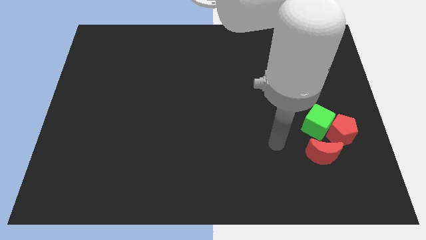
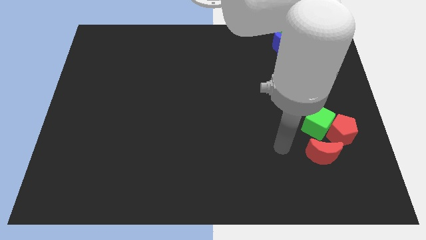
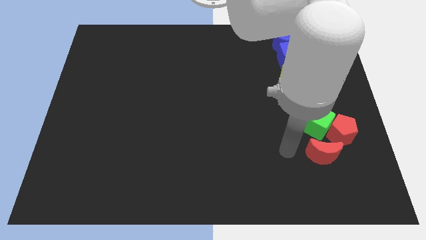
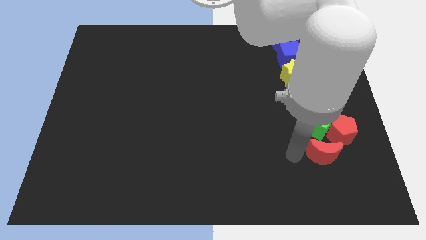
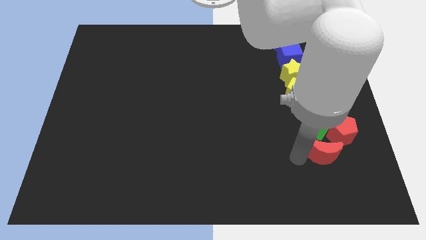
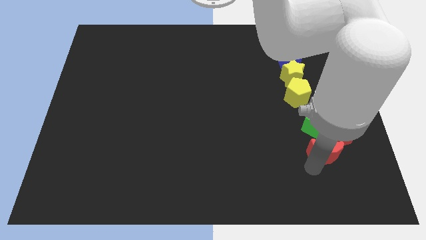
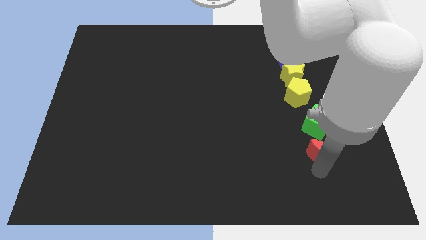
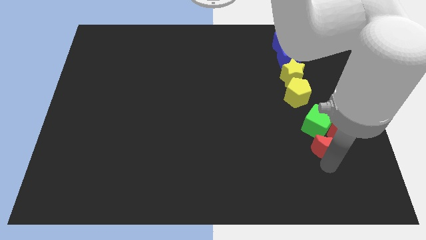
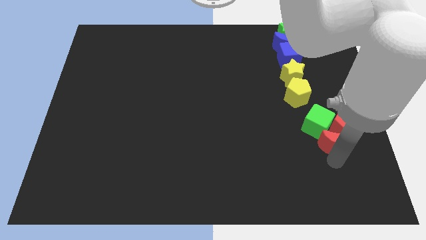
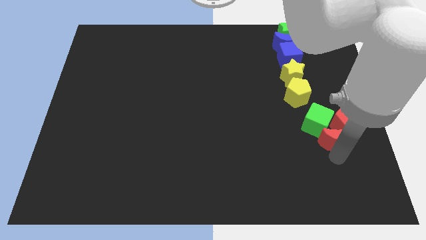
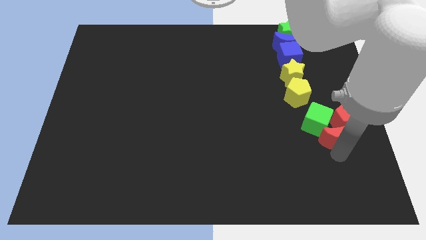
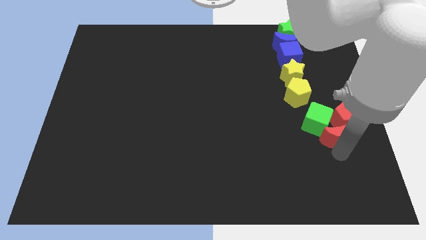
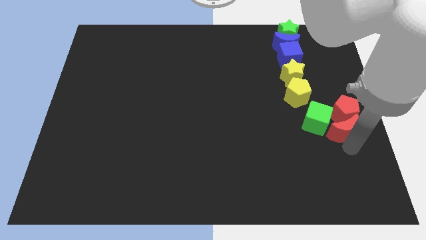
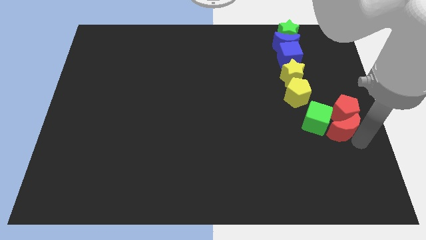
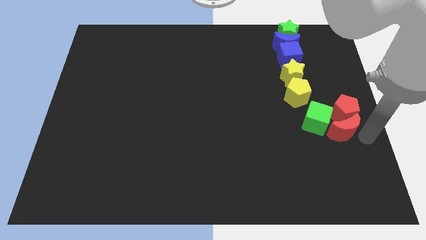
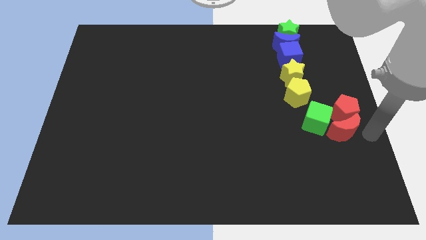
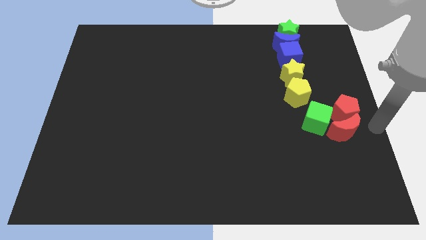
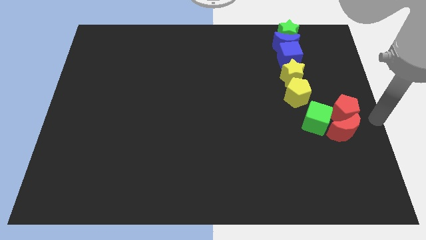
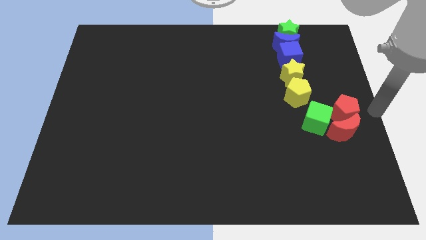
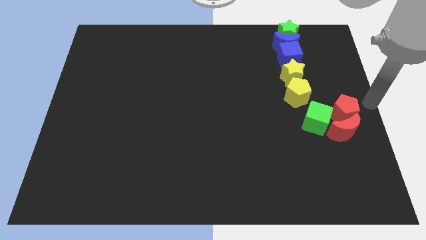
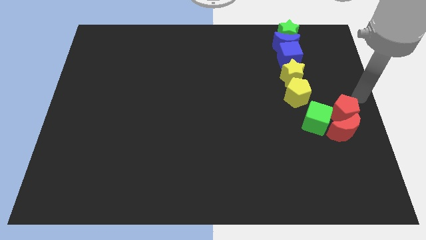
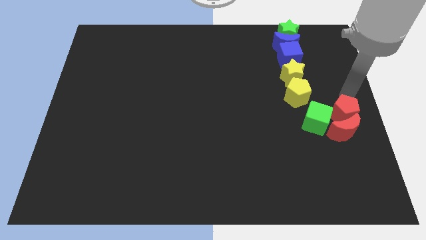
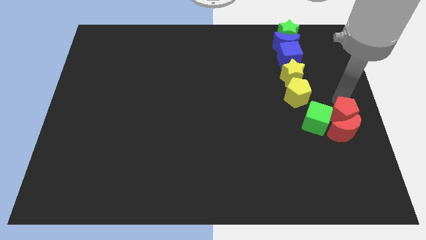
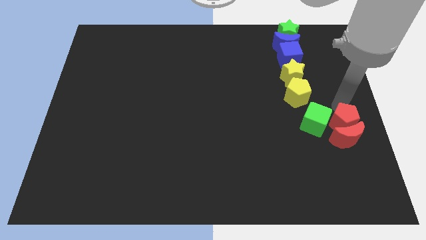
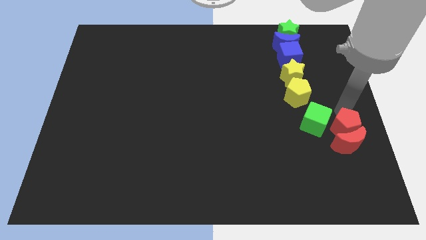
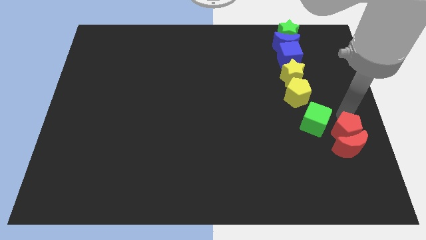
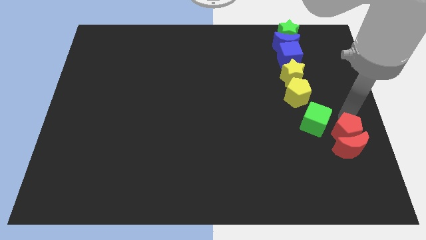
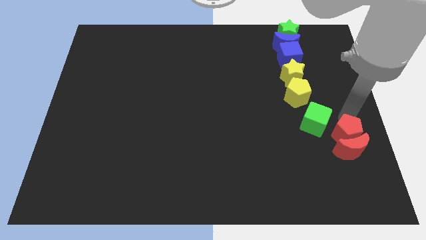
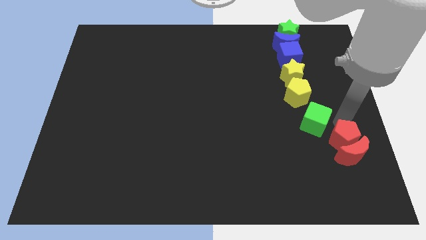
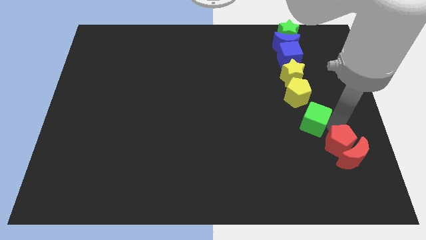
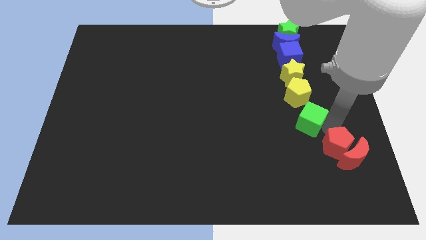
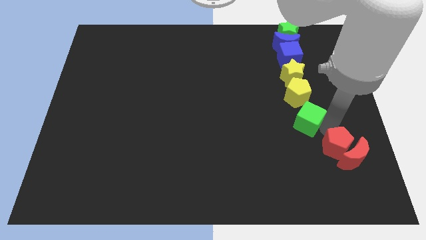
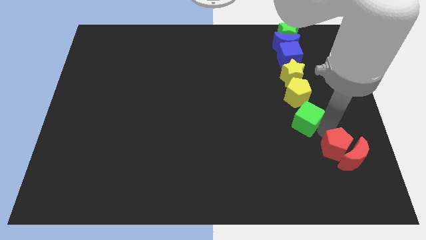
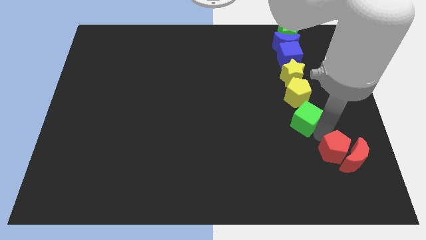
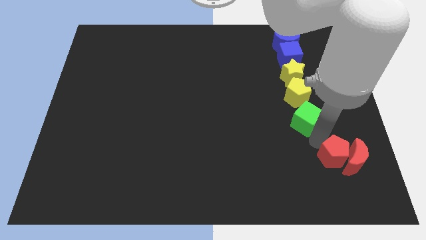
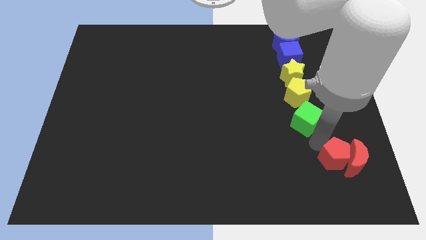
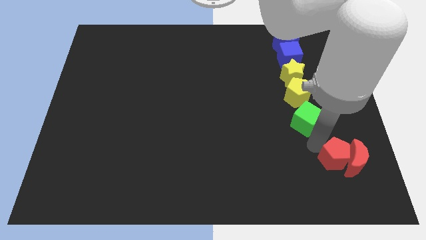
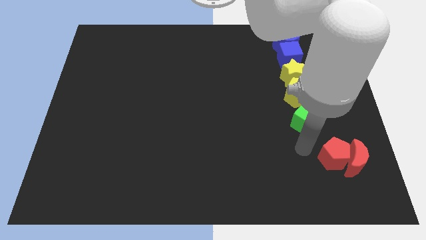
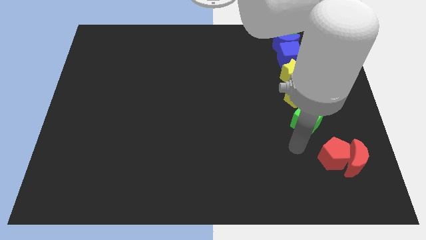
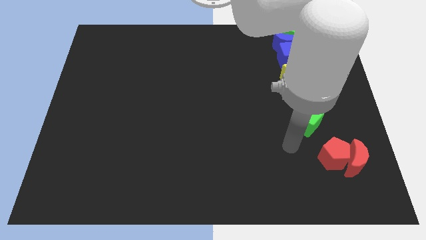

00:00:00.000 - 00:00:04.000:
separate the green cube from the red pentagon and red crescent

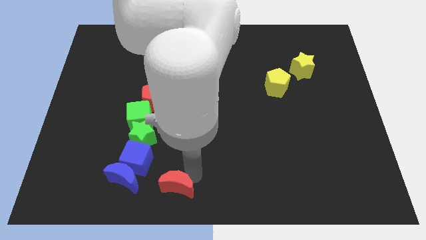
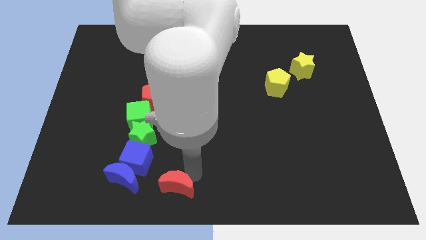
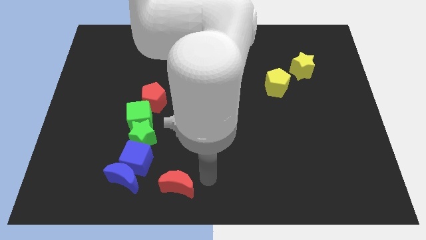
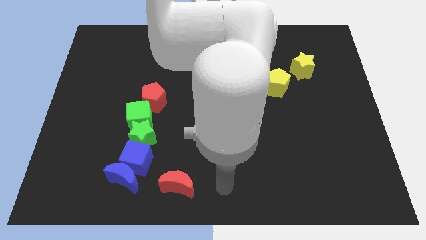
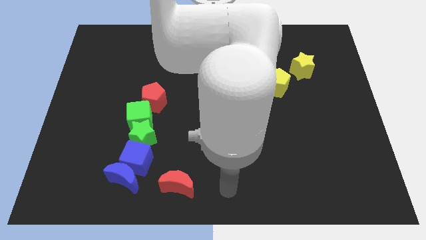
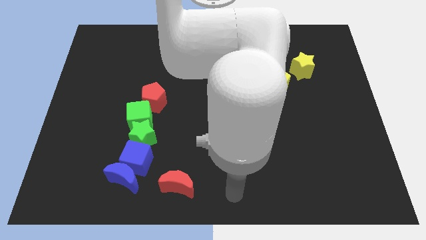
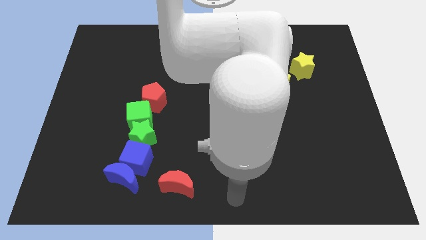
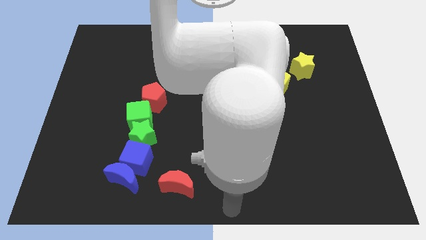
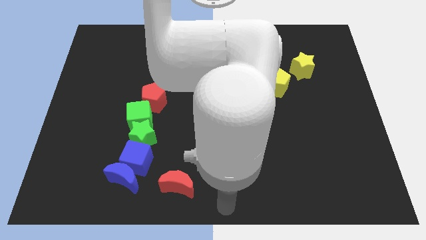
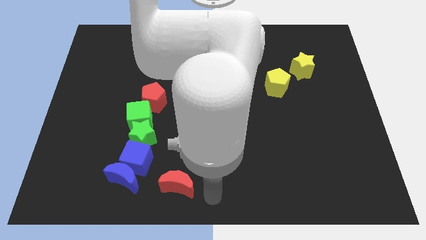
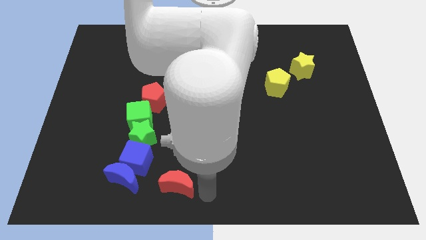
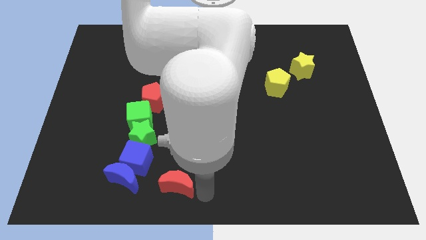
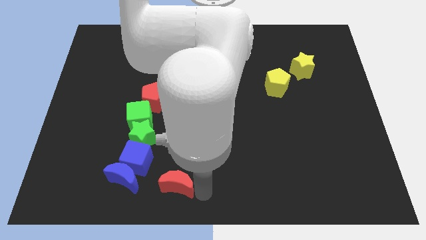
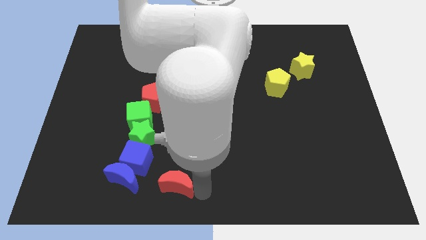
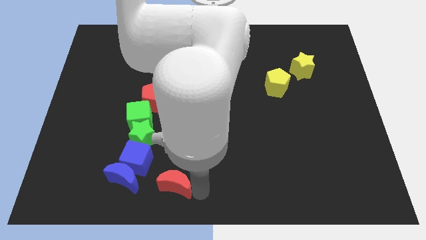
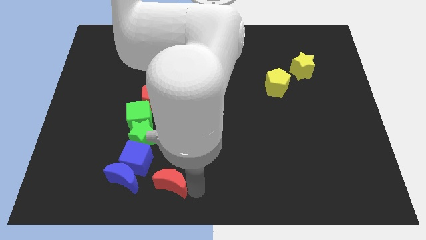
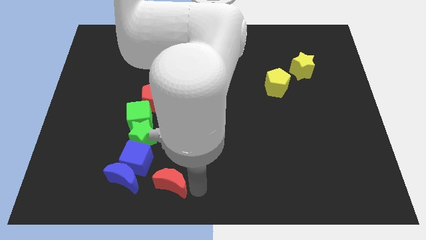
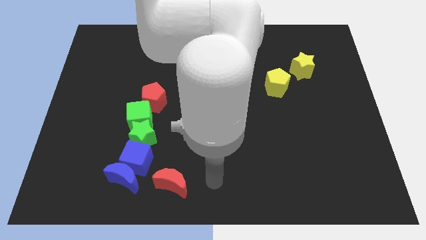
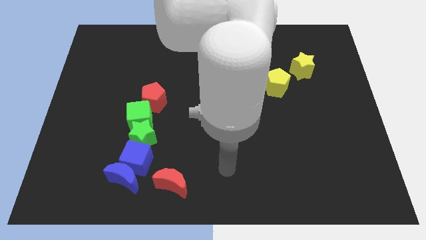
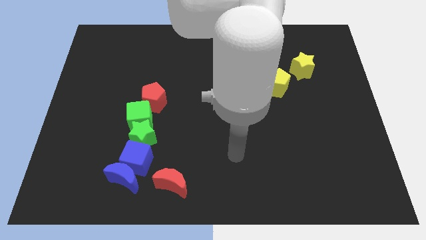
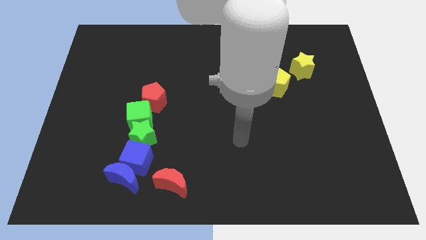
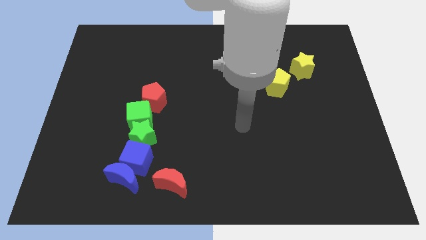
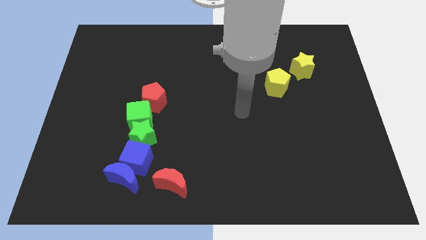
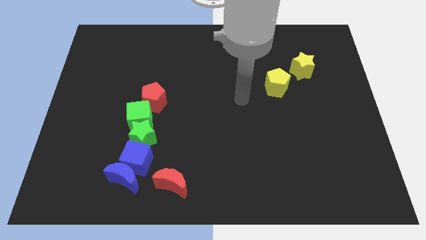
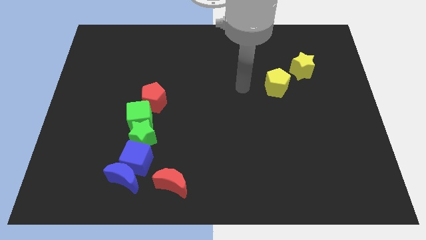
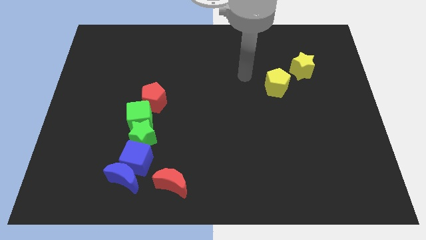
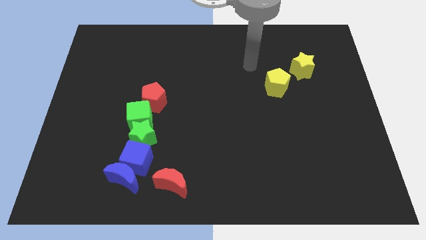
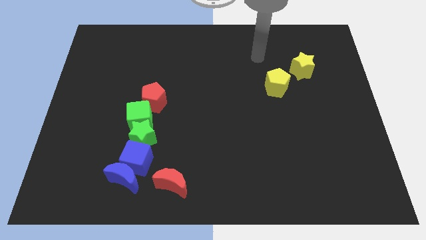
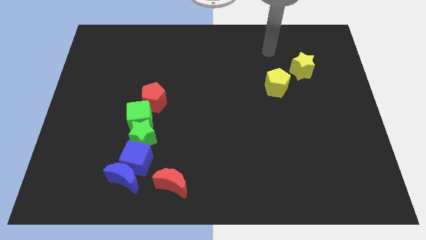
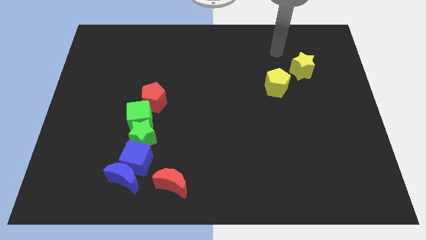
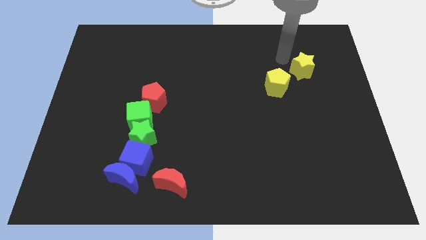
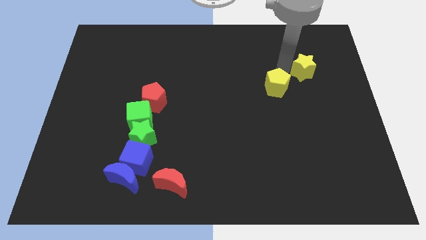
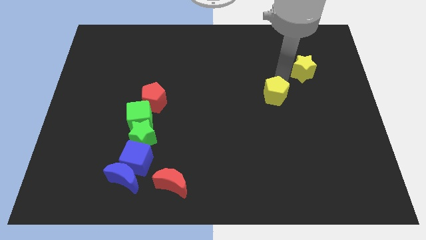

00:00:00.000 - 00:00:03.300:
put your hand away from the red moon

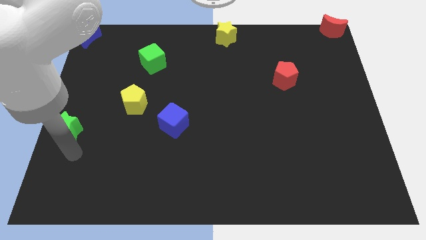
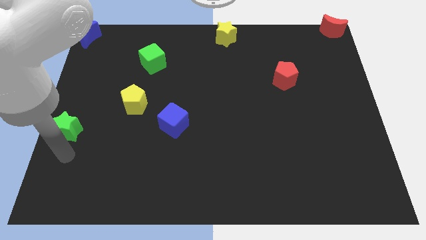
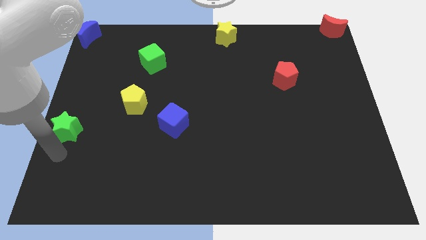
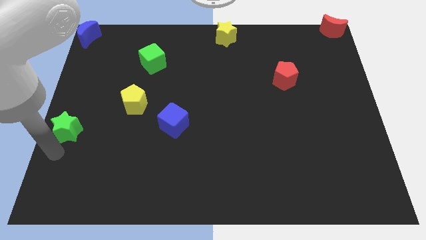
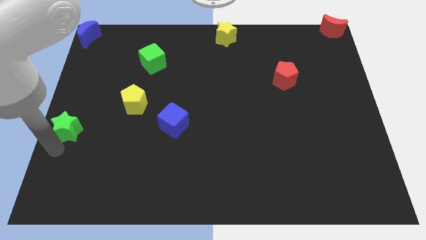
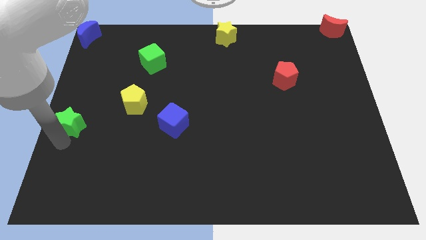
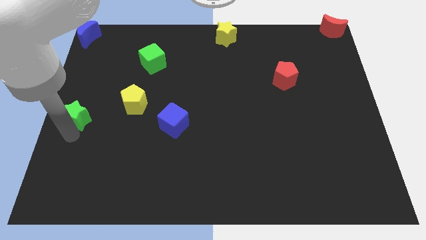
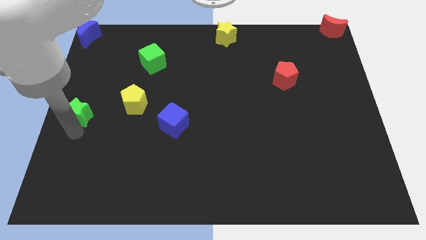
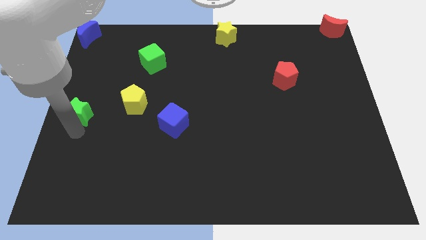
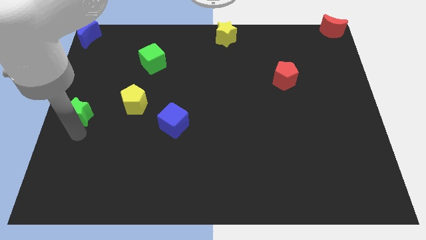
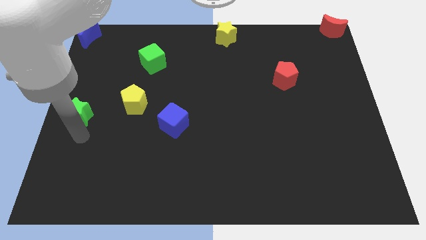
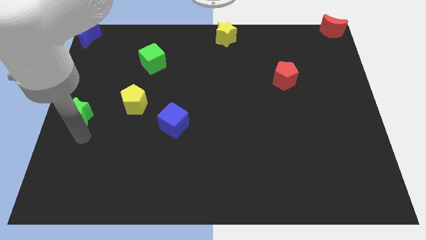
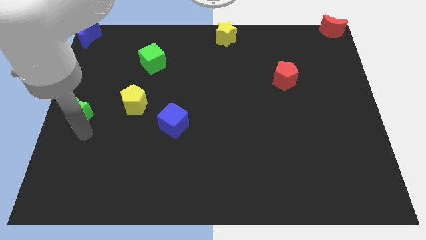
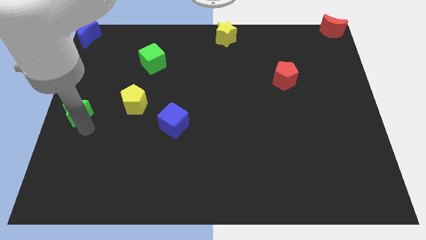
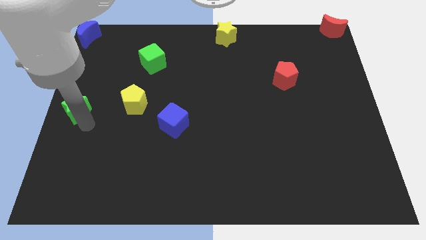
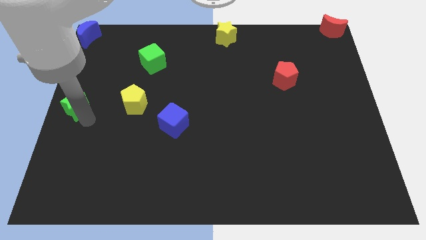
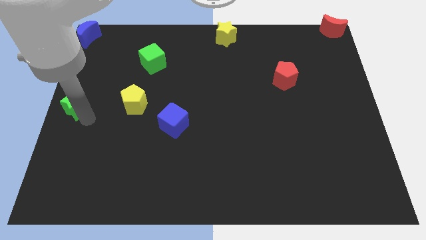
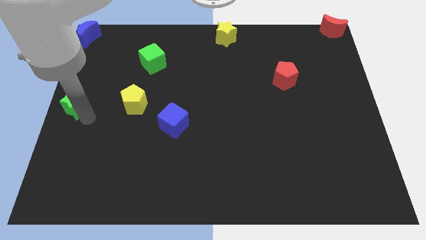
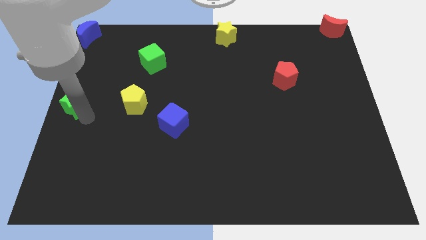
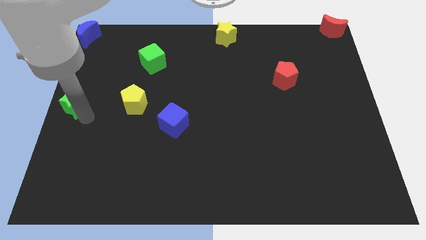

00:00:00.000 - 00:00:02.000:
push the green star towards the center left of the board
